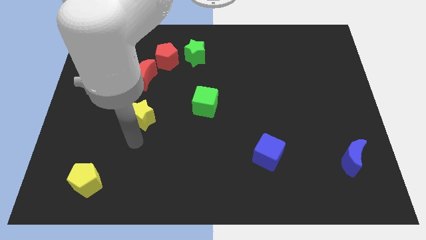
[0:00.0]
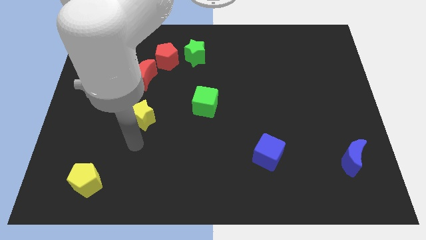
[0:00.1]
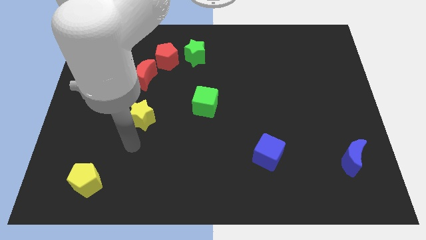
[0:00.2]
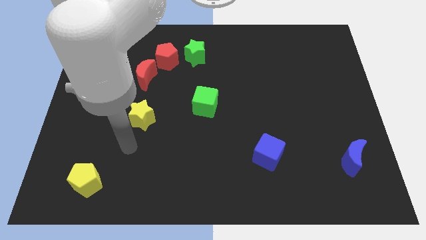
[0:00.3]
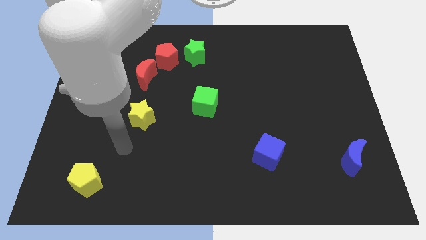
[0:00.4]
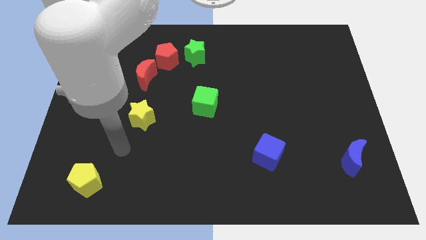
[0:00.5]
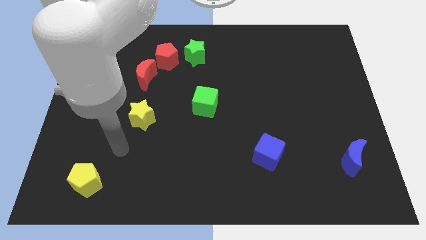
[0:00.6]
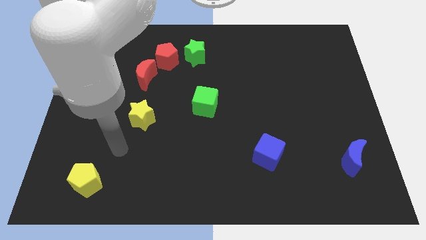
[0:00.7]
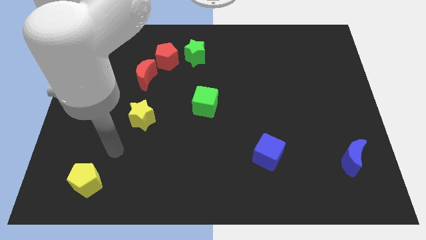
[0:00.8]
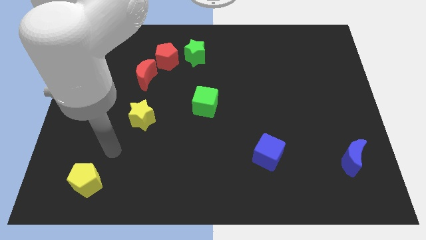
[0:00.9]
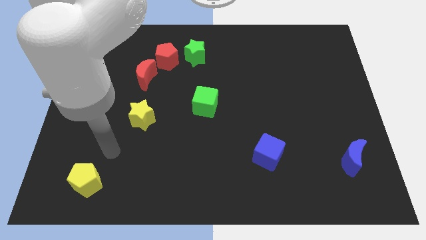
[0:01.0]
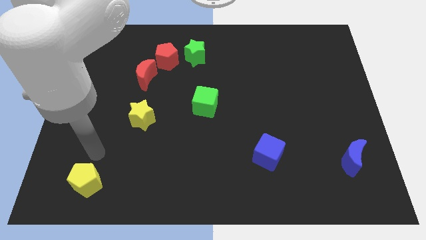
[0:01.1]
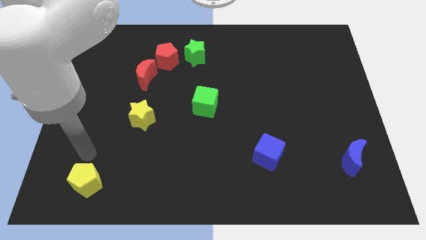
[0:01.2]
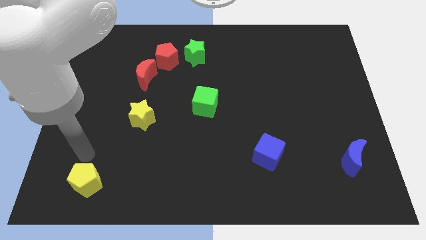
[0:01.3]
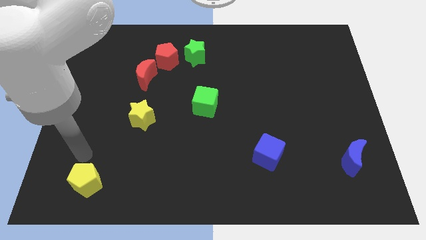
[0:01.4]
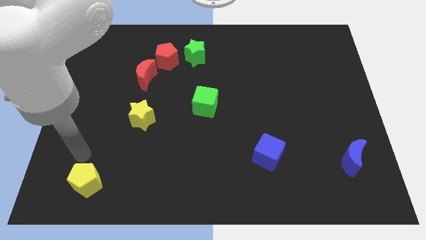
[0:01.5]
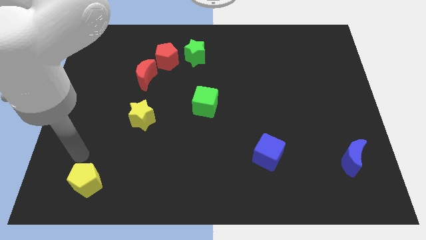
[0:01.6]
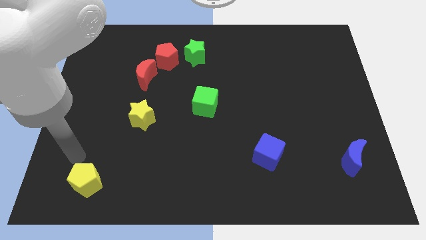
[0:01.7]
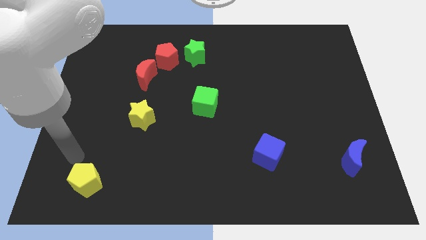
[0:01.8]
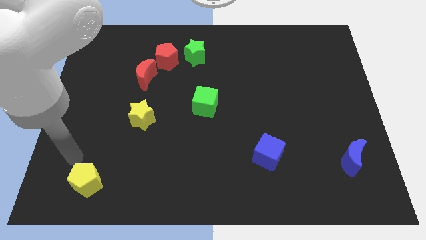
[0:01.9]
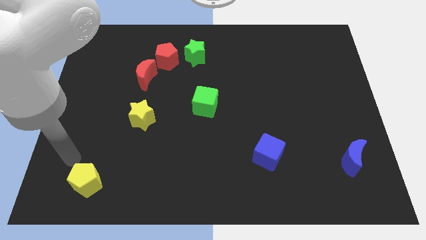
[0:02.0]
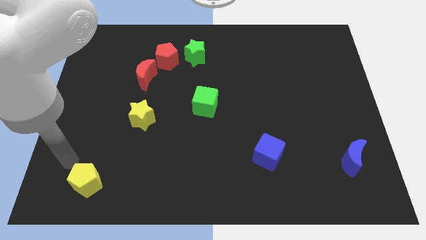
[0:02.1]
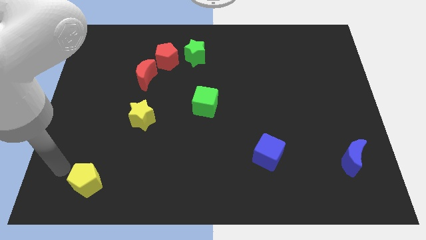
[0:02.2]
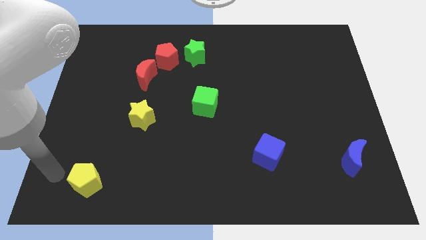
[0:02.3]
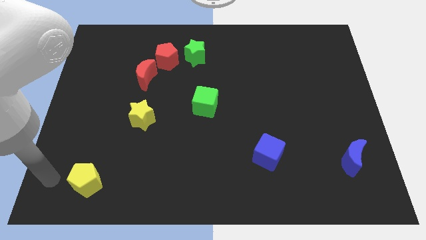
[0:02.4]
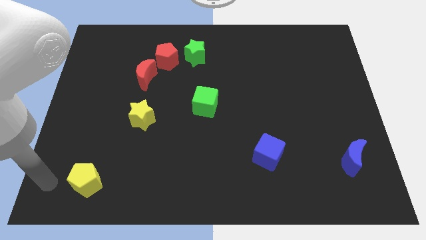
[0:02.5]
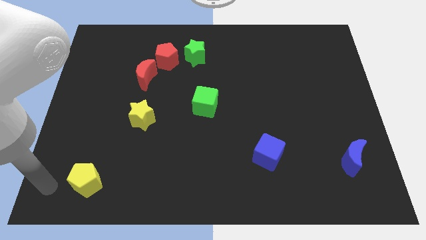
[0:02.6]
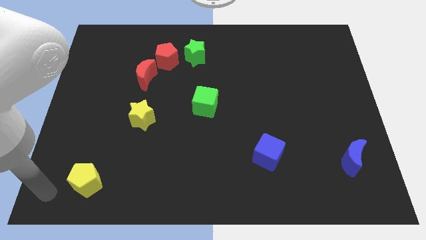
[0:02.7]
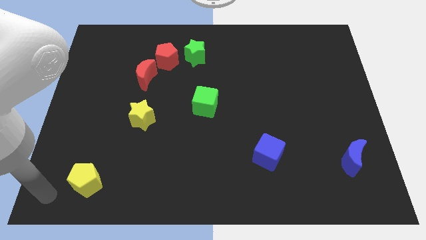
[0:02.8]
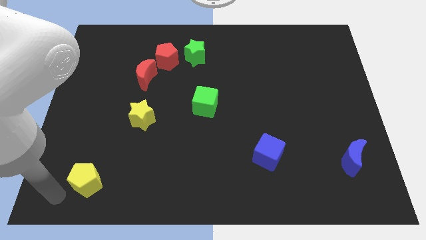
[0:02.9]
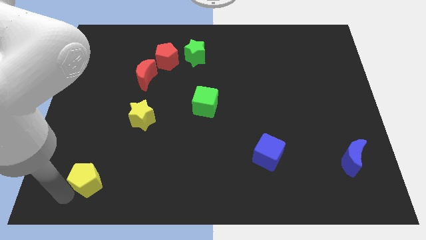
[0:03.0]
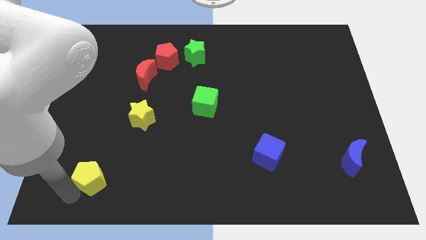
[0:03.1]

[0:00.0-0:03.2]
move your arm and point below the yellow pentagon

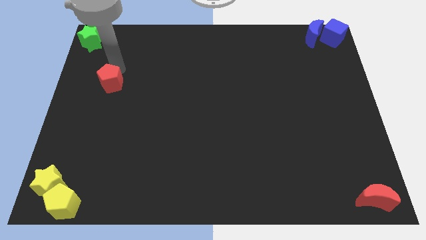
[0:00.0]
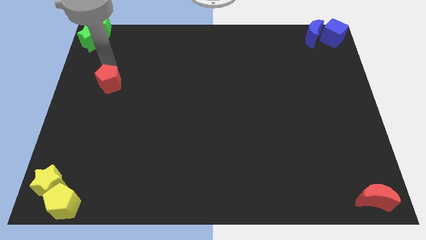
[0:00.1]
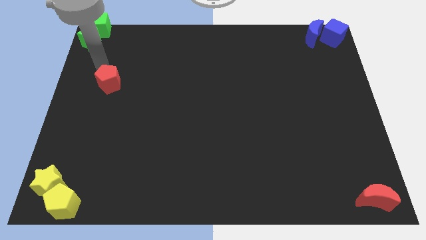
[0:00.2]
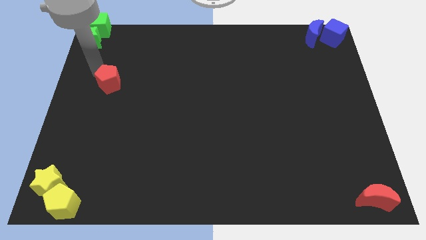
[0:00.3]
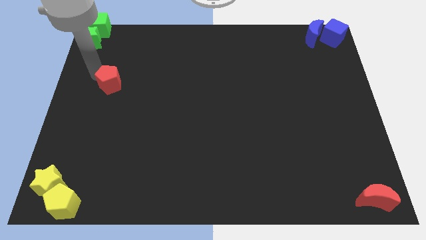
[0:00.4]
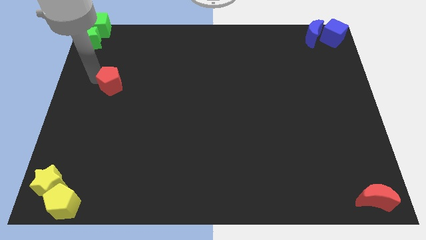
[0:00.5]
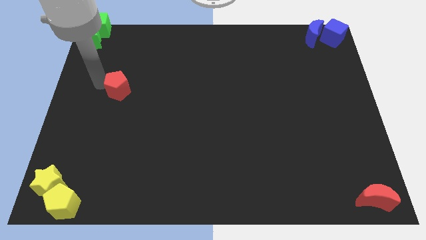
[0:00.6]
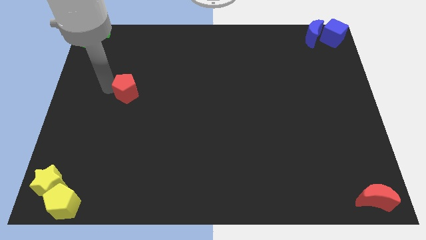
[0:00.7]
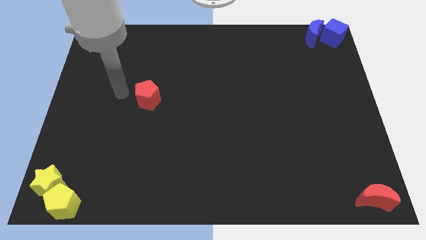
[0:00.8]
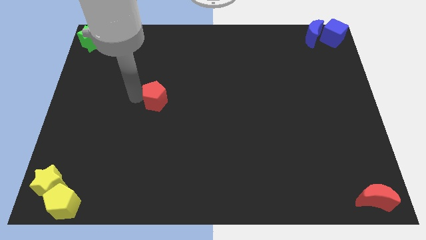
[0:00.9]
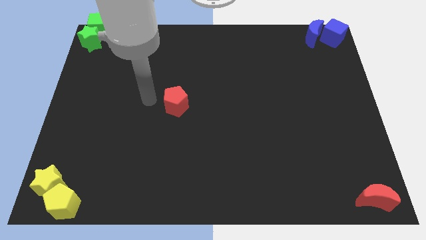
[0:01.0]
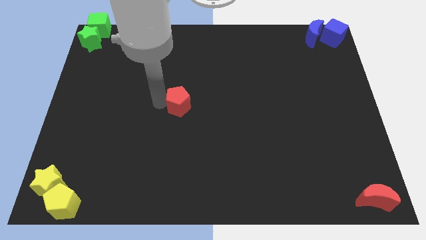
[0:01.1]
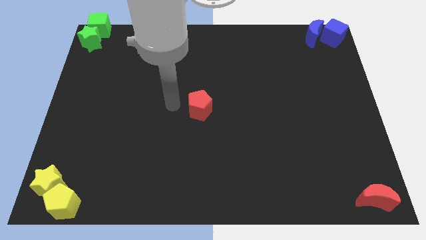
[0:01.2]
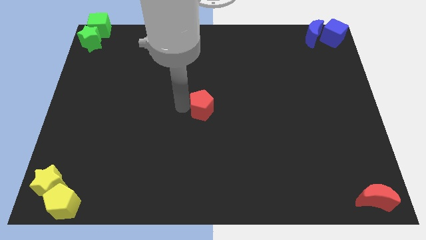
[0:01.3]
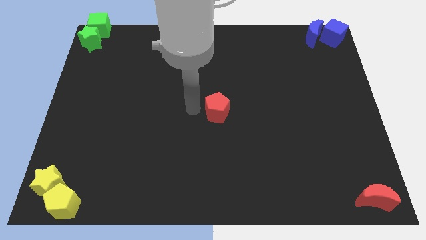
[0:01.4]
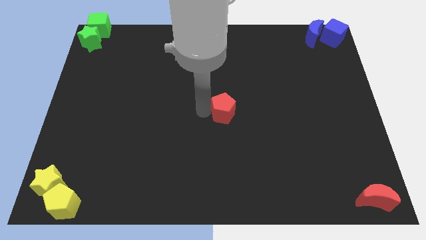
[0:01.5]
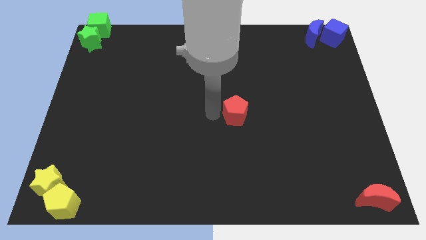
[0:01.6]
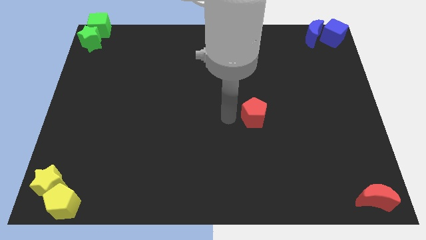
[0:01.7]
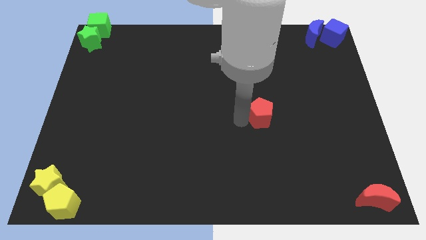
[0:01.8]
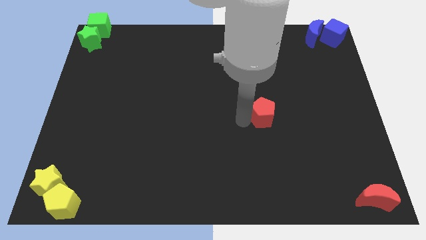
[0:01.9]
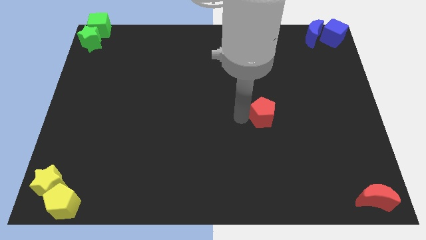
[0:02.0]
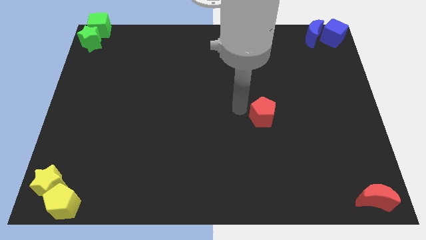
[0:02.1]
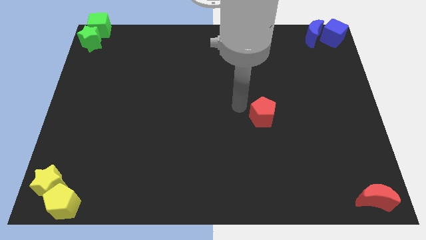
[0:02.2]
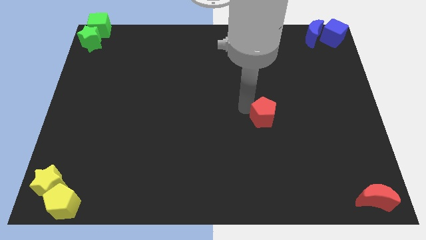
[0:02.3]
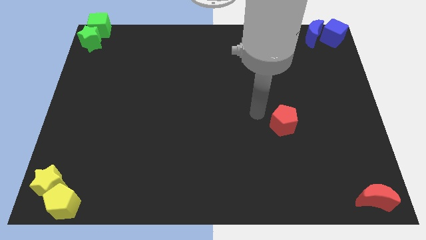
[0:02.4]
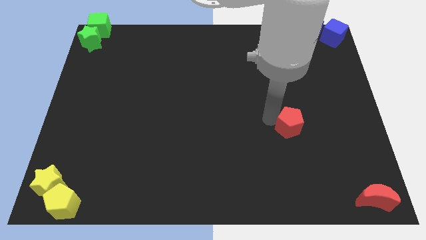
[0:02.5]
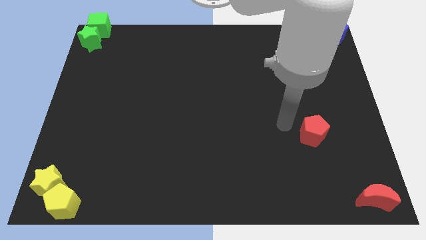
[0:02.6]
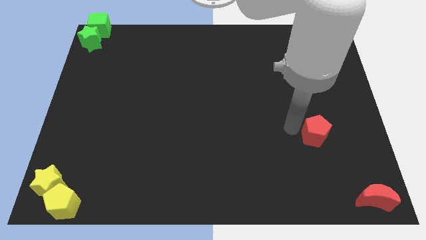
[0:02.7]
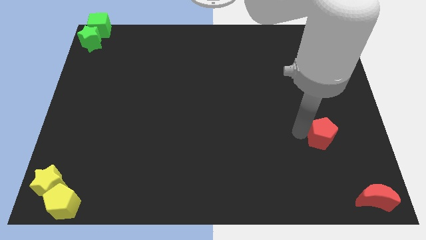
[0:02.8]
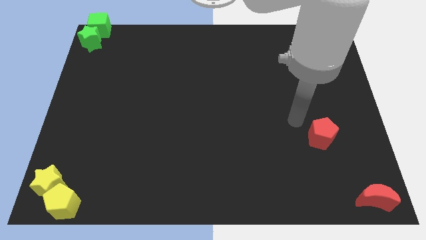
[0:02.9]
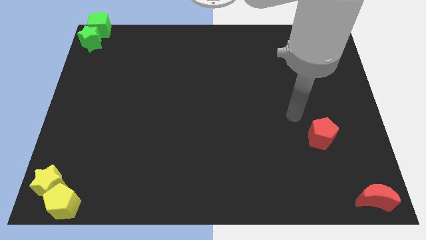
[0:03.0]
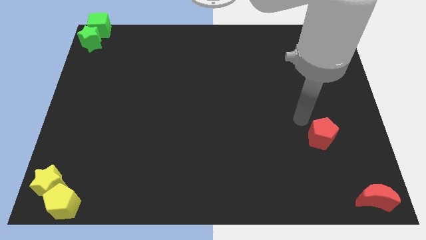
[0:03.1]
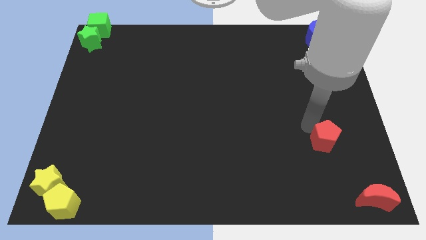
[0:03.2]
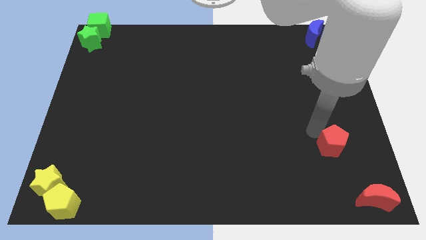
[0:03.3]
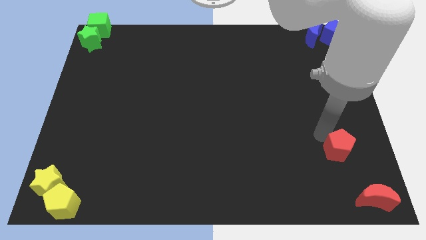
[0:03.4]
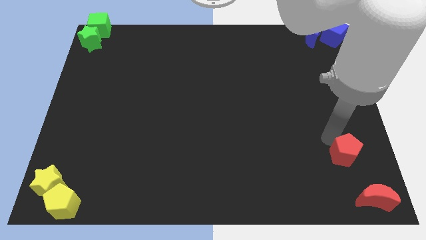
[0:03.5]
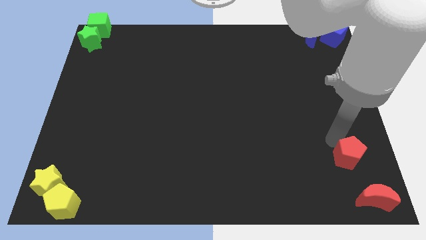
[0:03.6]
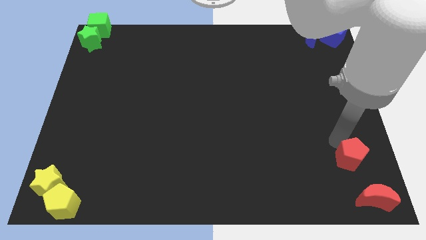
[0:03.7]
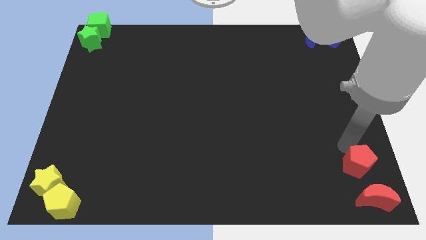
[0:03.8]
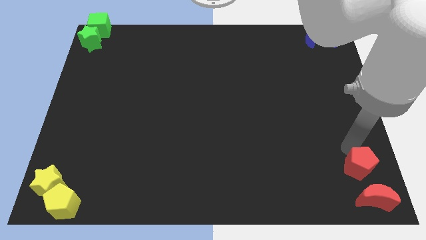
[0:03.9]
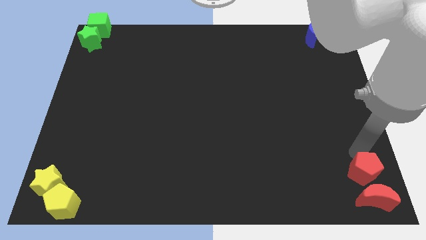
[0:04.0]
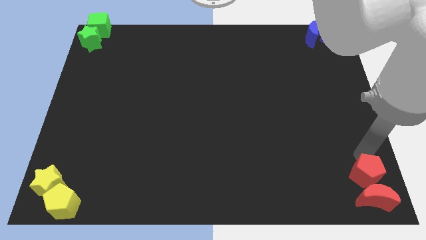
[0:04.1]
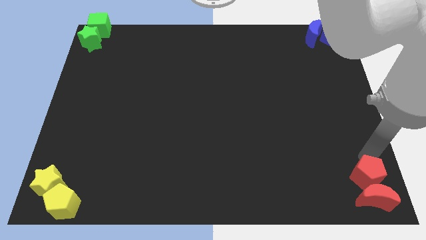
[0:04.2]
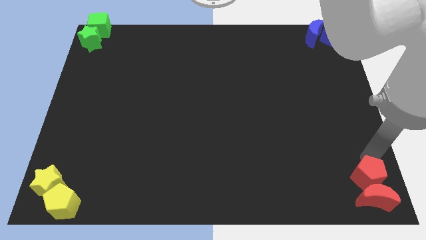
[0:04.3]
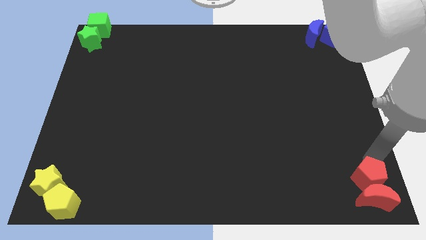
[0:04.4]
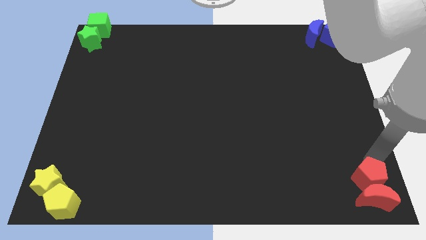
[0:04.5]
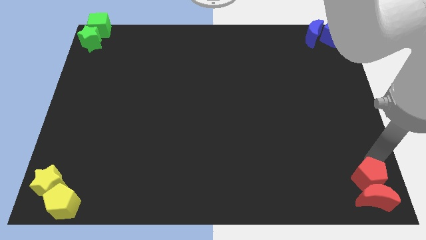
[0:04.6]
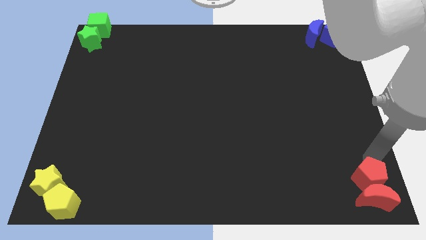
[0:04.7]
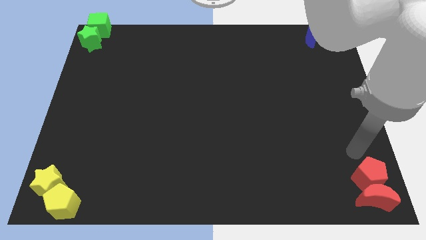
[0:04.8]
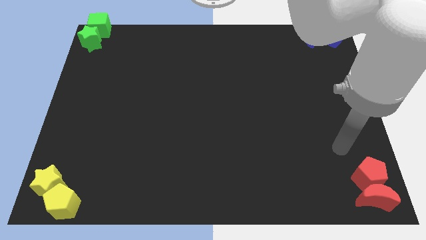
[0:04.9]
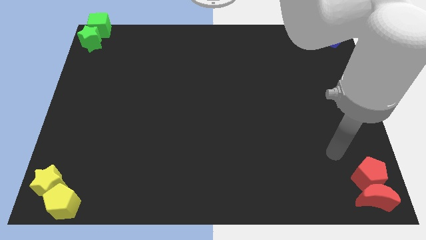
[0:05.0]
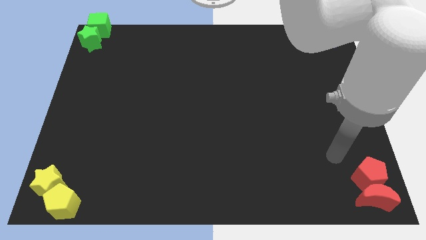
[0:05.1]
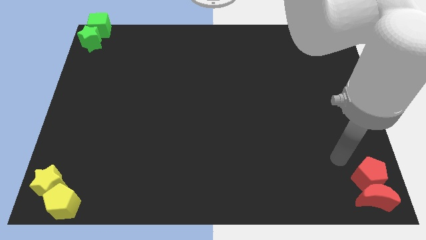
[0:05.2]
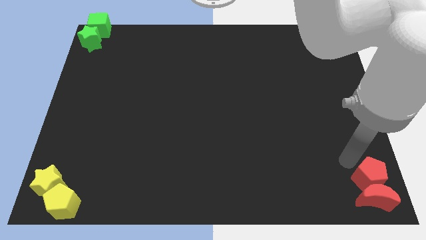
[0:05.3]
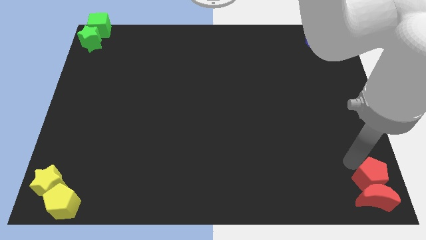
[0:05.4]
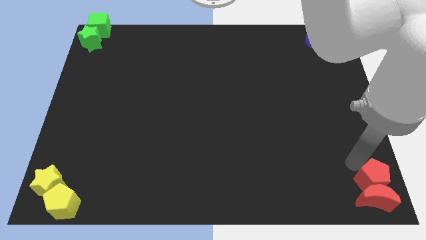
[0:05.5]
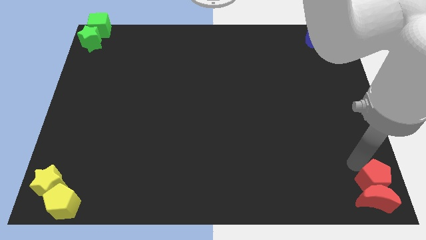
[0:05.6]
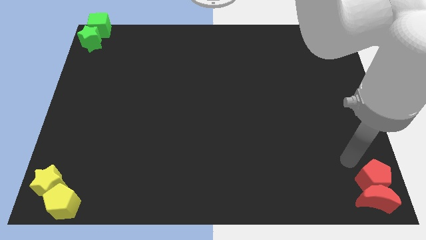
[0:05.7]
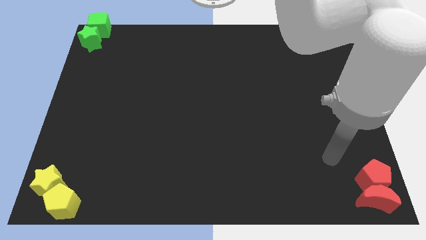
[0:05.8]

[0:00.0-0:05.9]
place the red pentagon to the top of red moon
